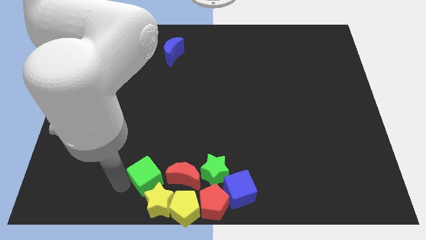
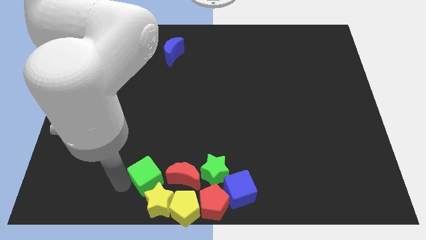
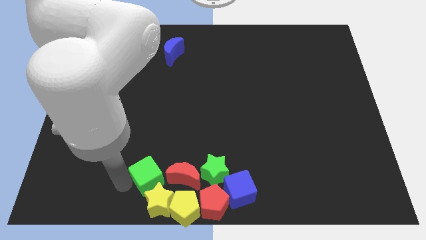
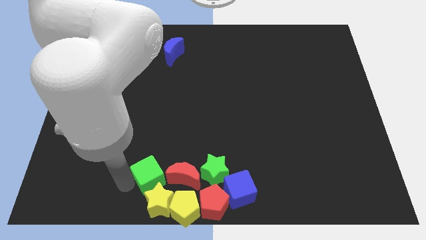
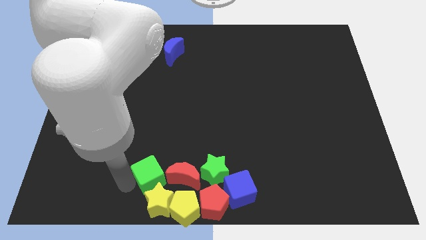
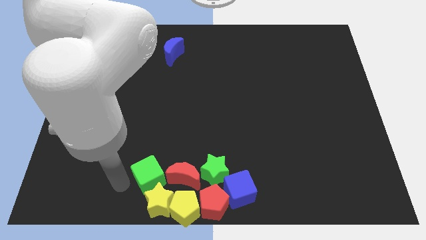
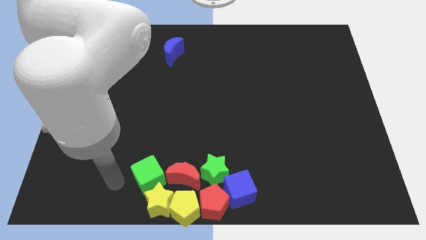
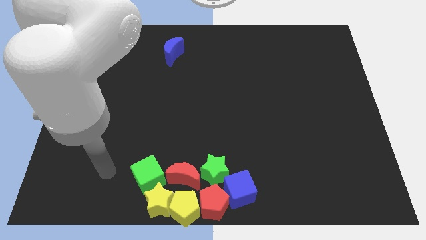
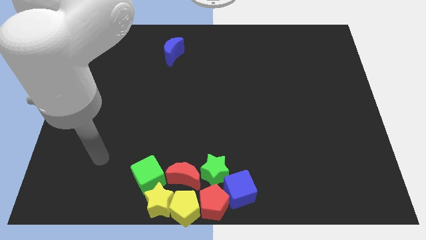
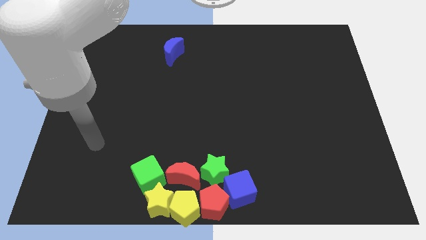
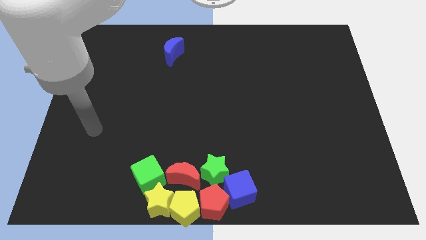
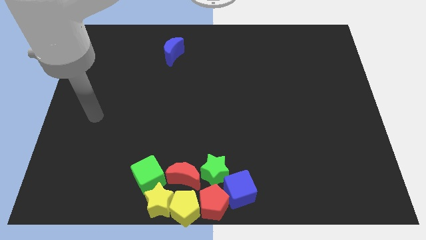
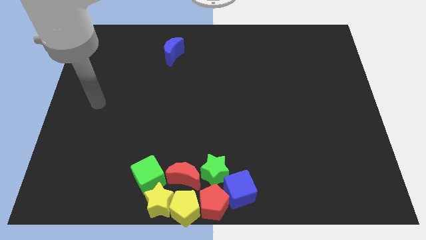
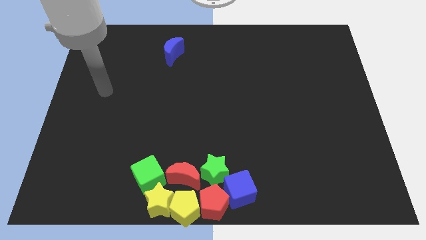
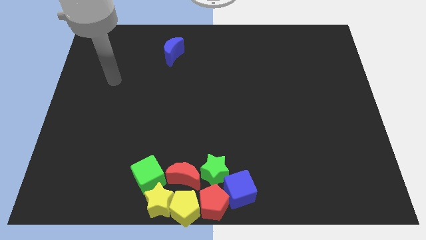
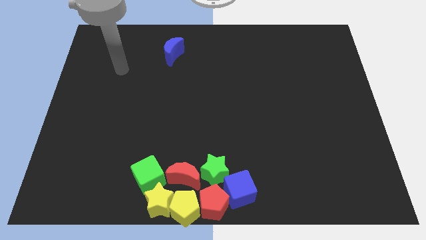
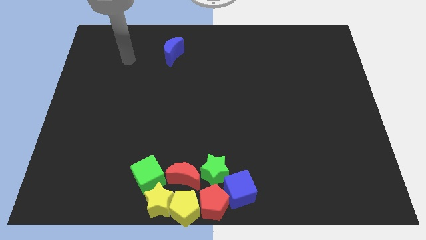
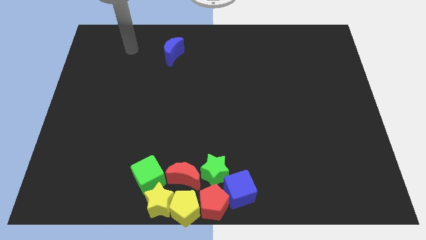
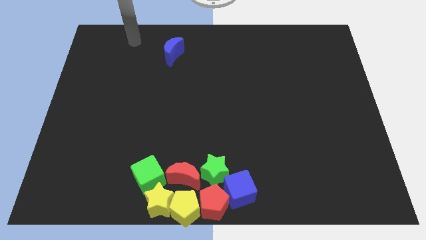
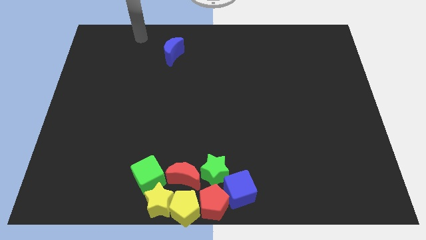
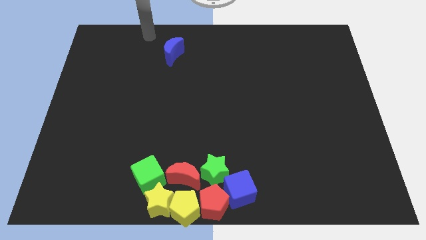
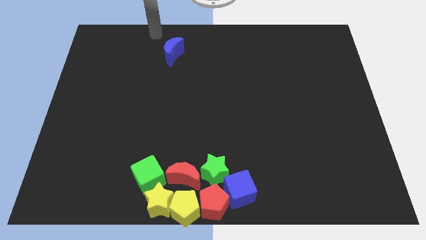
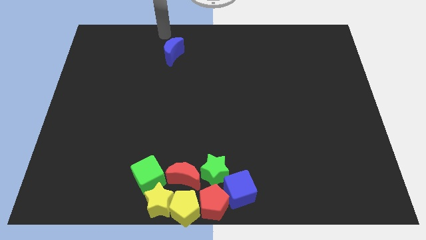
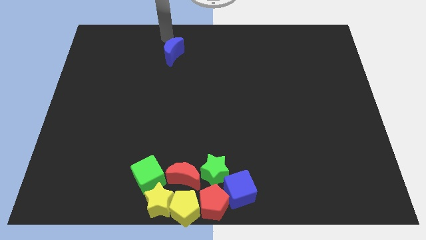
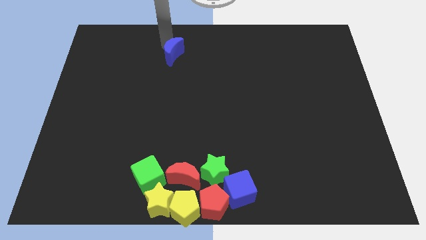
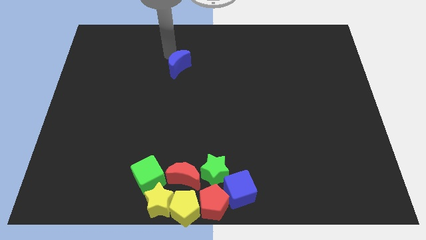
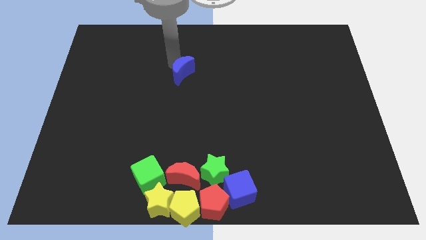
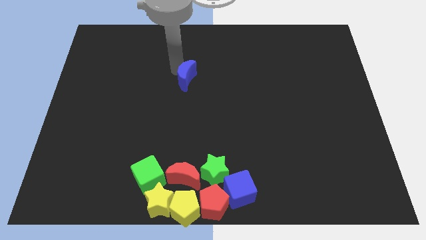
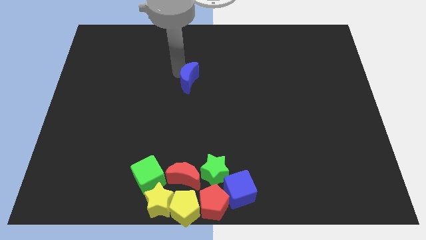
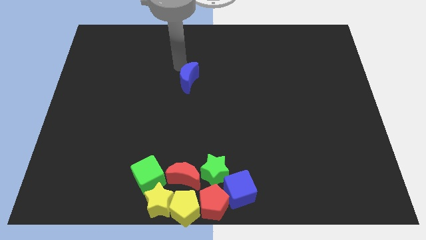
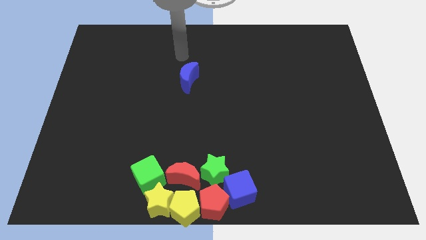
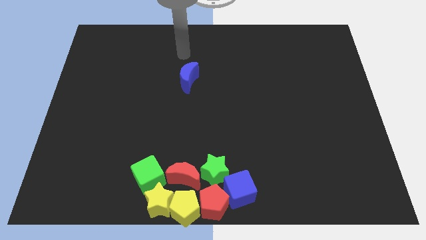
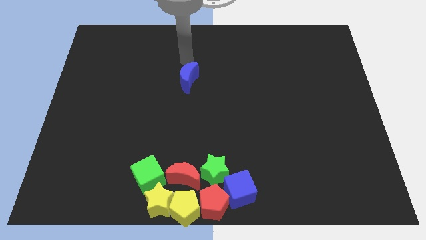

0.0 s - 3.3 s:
slightly push the blue crescent towards the red crescent

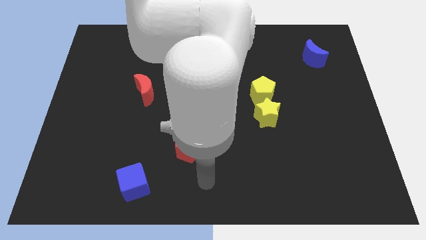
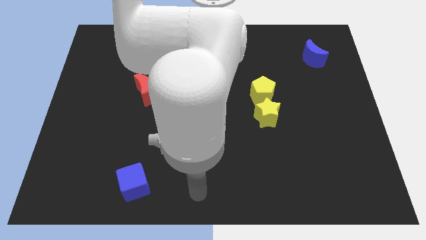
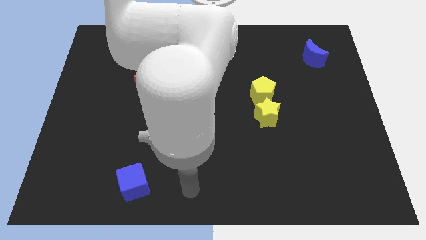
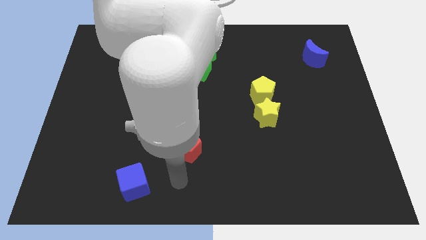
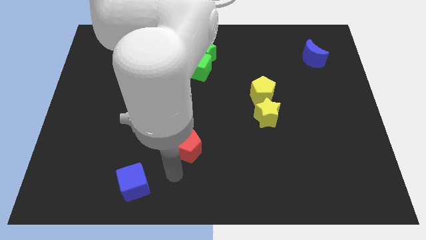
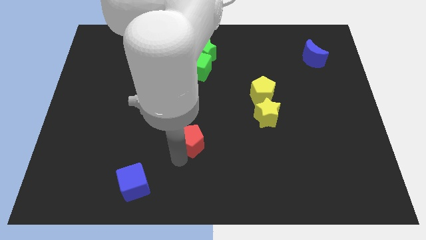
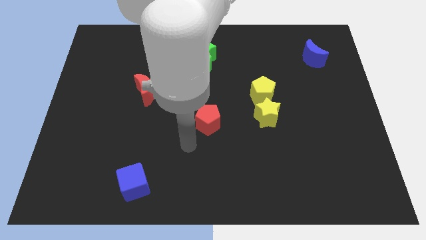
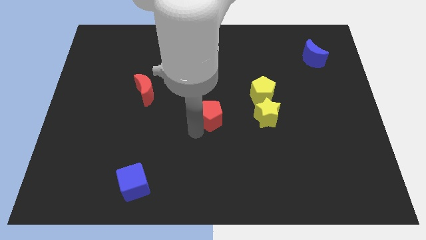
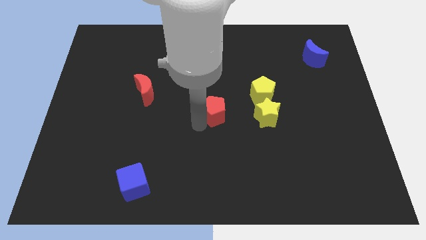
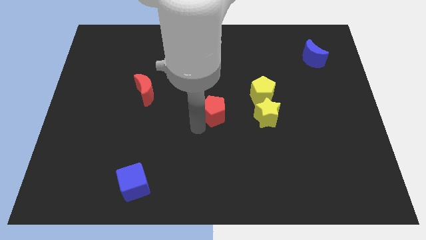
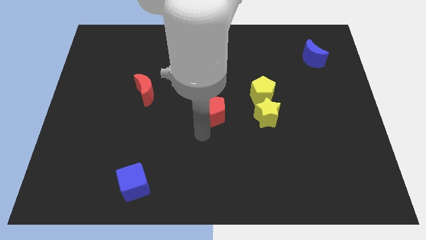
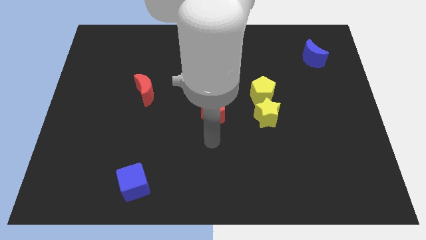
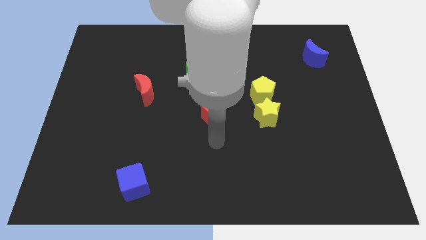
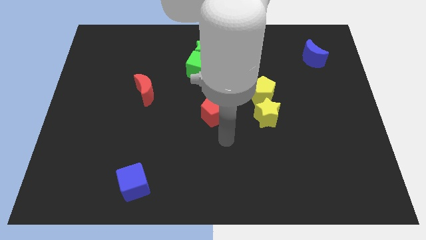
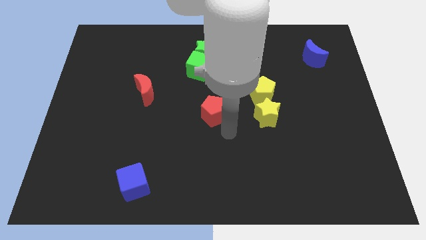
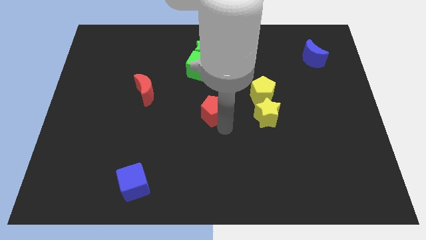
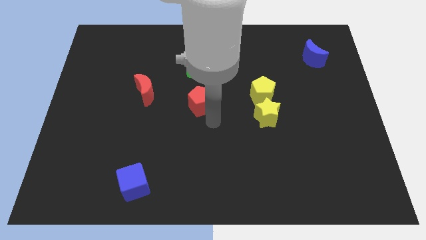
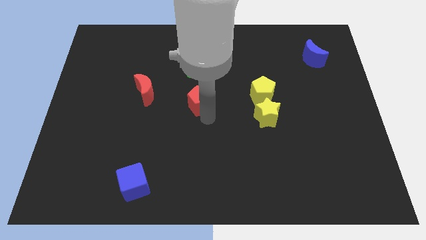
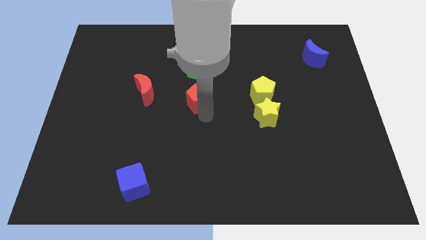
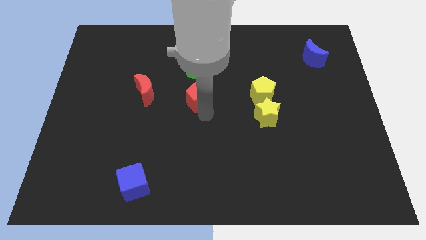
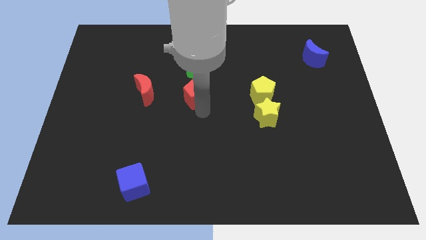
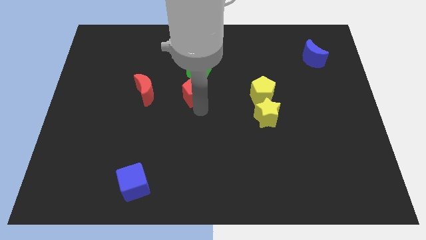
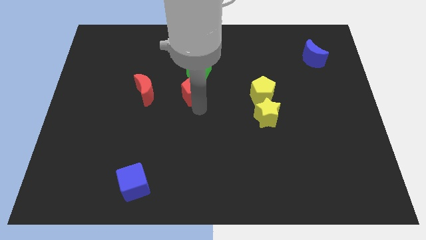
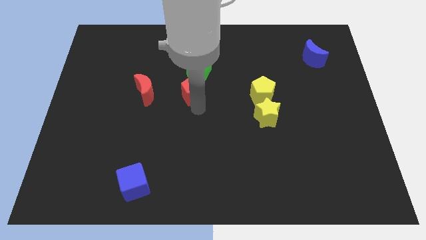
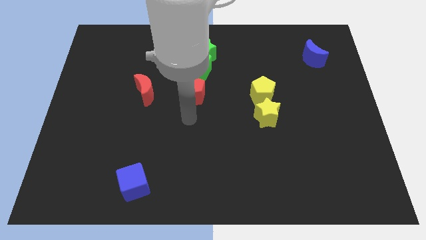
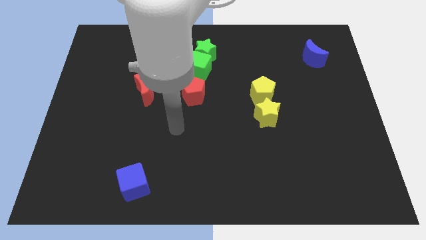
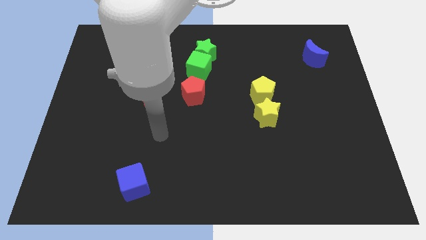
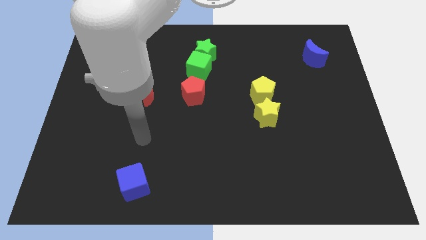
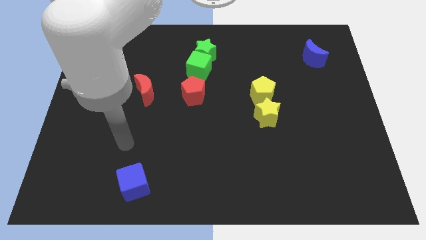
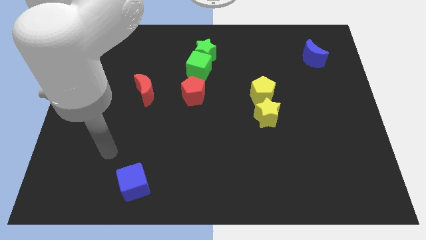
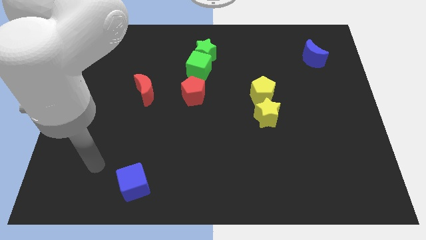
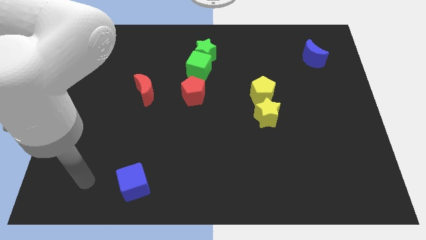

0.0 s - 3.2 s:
move the red pentagon towards center

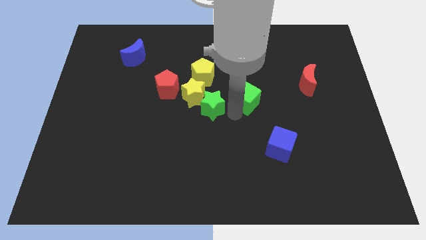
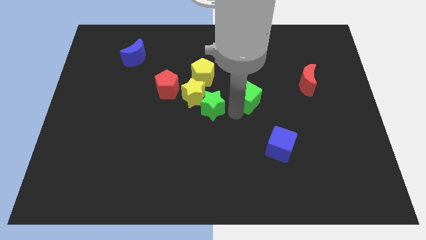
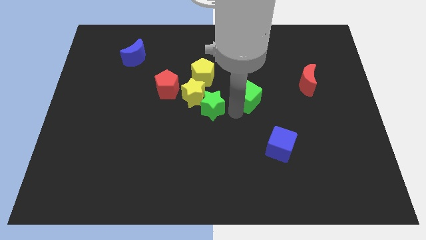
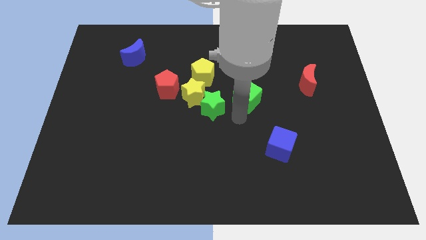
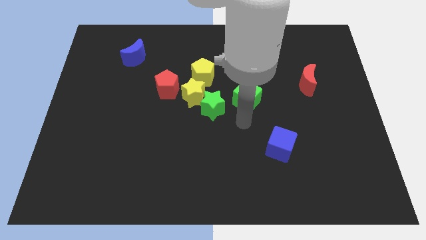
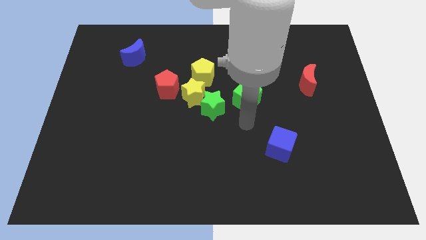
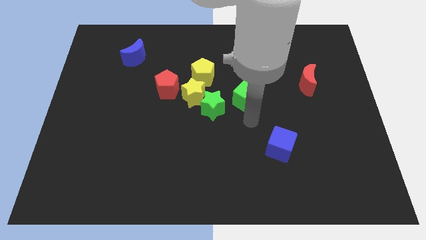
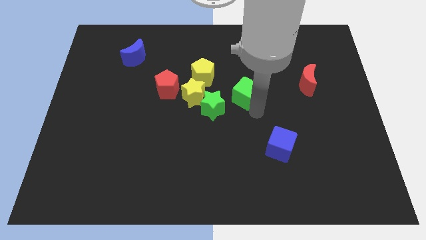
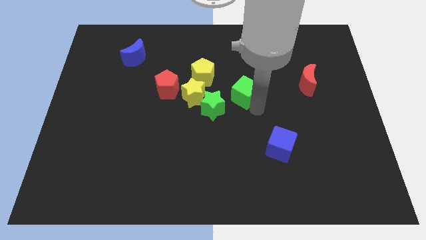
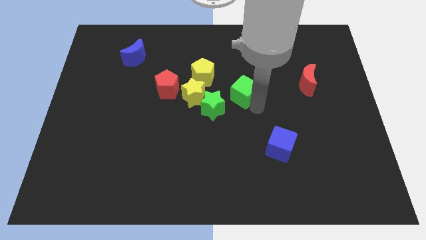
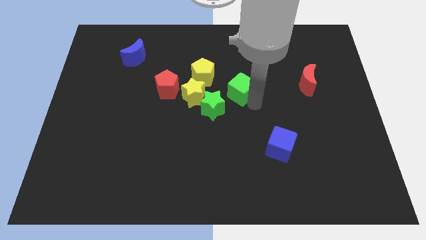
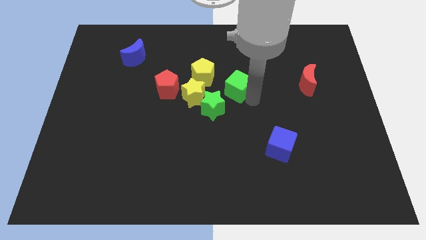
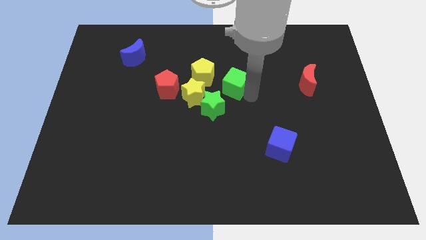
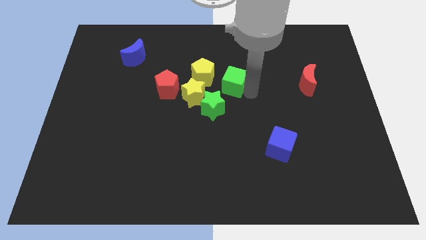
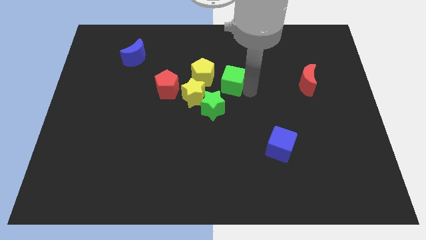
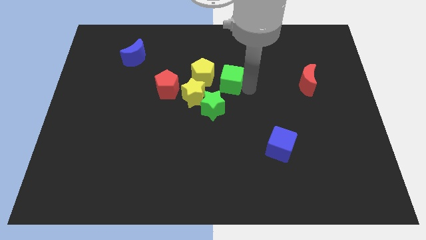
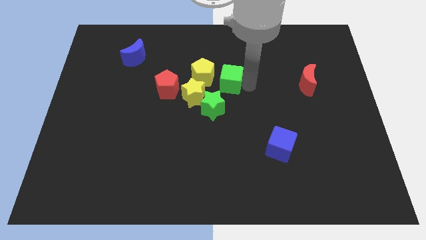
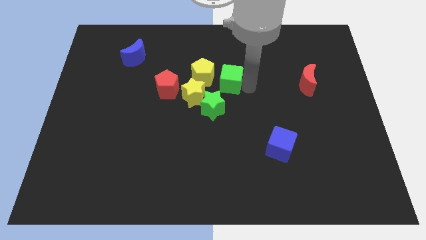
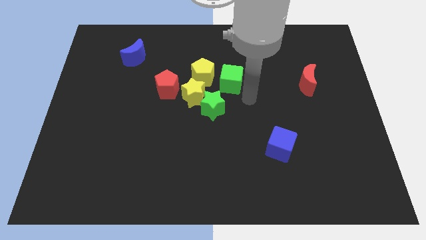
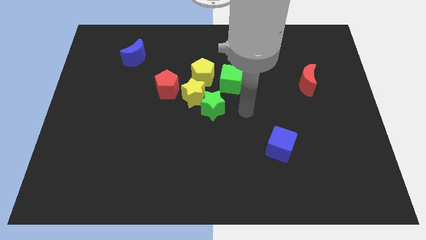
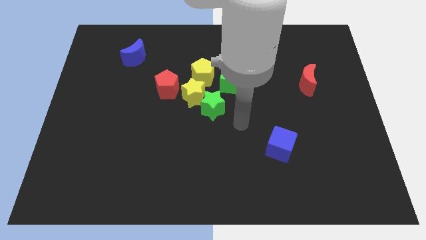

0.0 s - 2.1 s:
place the green cube to the right side of the yellow pentagon

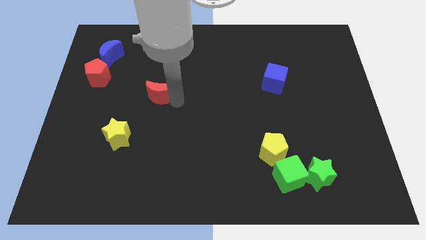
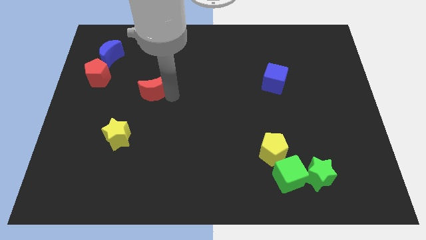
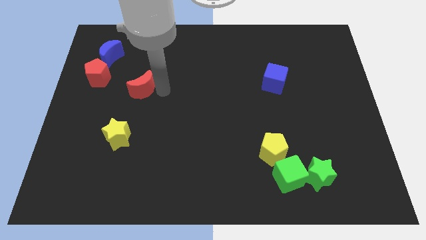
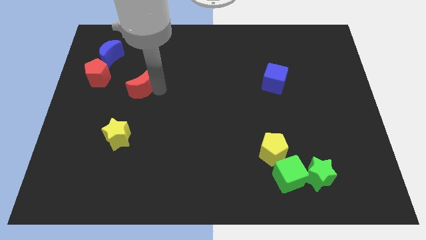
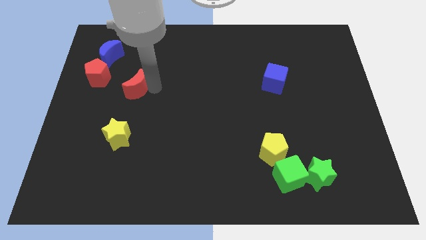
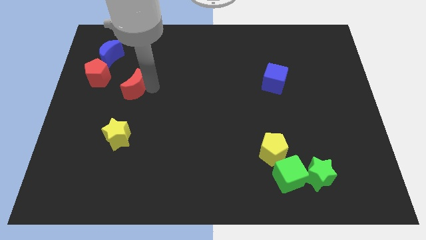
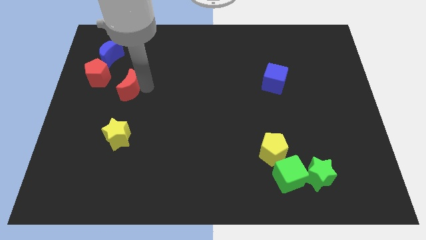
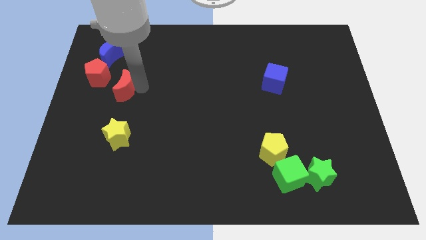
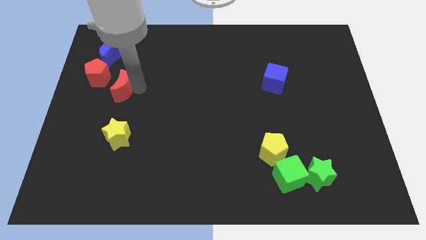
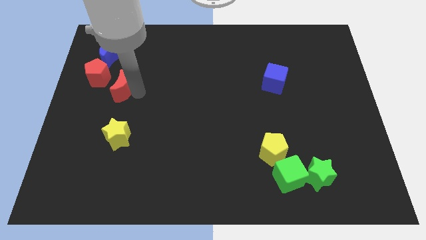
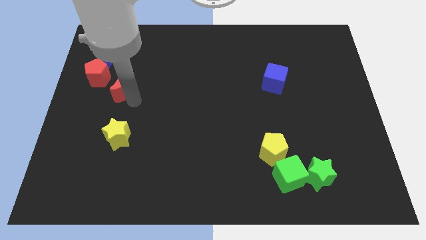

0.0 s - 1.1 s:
push red moon towards red pentagon
